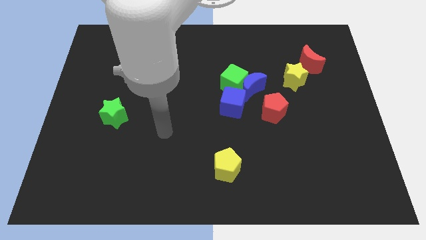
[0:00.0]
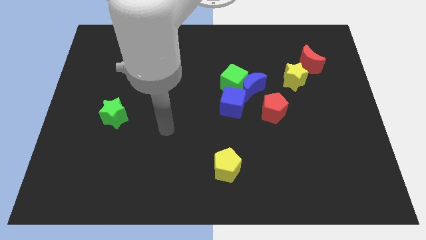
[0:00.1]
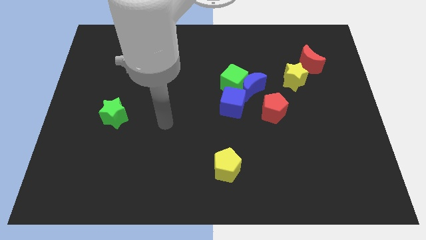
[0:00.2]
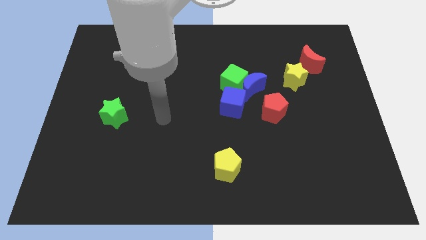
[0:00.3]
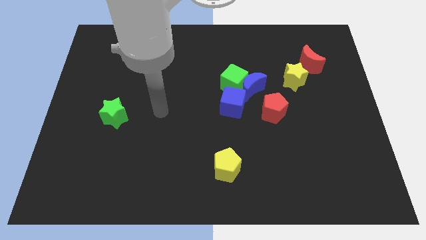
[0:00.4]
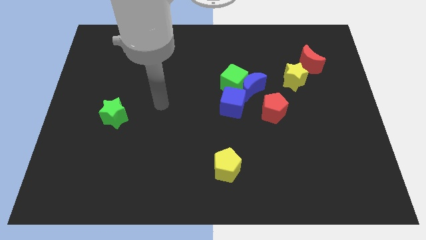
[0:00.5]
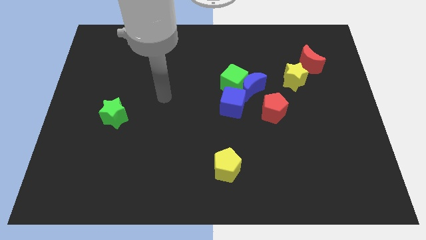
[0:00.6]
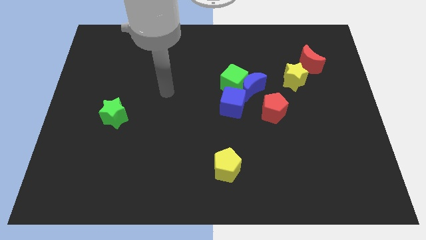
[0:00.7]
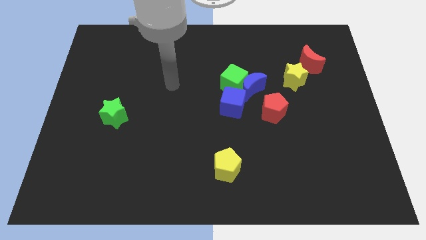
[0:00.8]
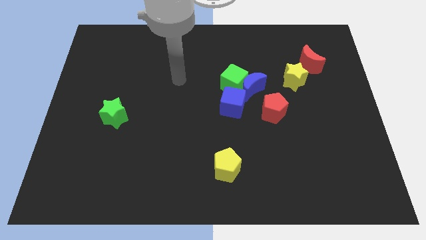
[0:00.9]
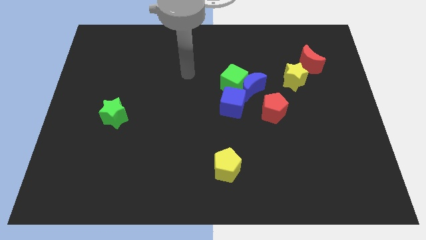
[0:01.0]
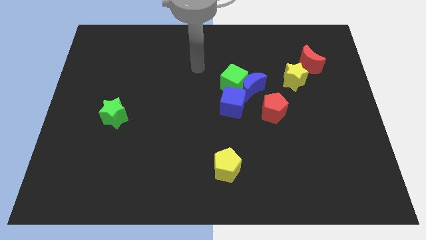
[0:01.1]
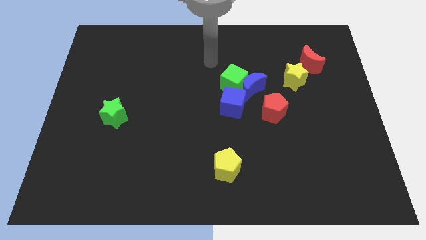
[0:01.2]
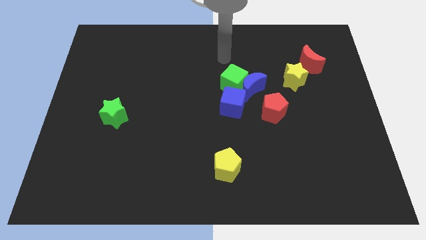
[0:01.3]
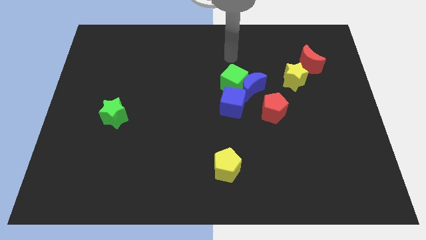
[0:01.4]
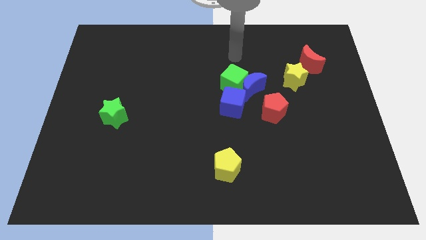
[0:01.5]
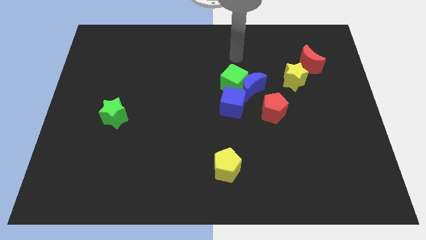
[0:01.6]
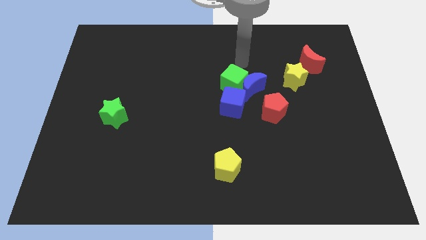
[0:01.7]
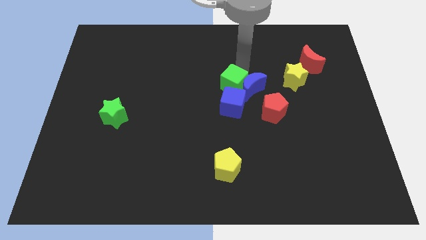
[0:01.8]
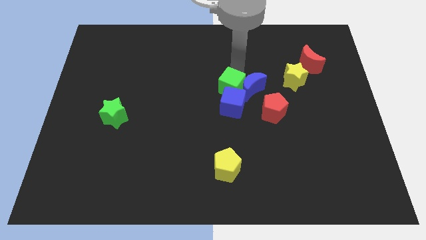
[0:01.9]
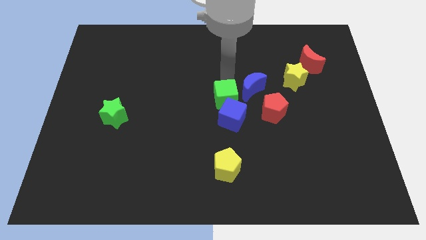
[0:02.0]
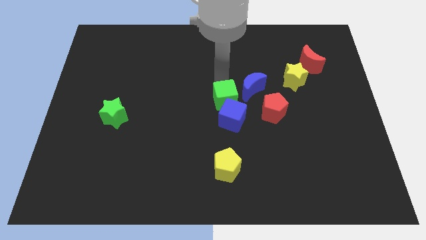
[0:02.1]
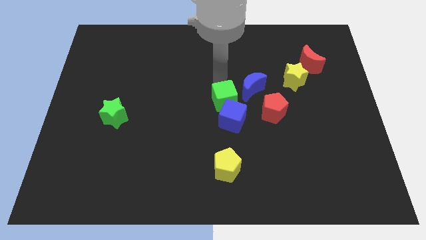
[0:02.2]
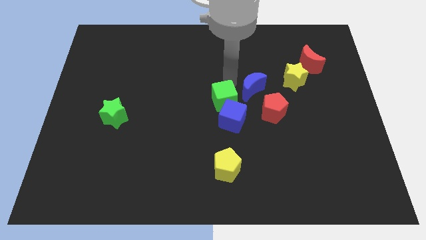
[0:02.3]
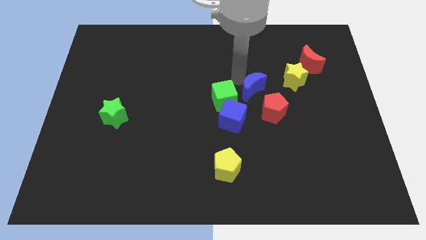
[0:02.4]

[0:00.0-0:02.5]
push the blue cube with the green cube slightly downwards

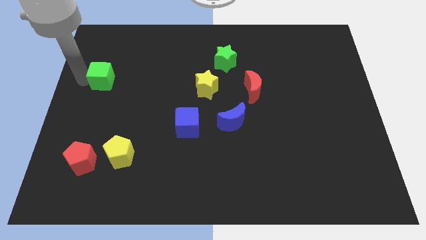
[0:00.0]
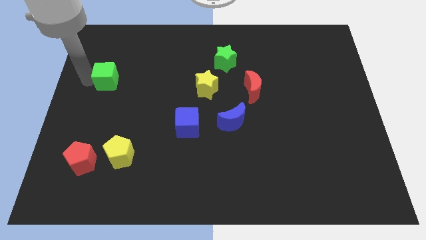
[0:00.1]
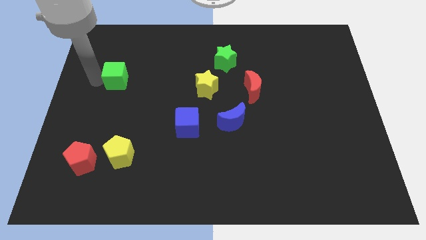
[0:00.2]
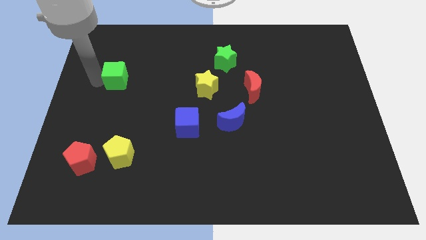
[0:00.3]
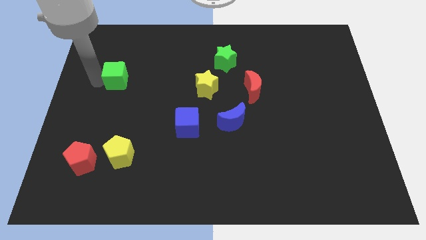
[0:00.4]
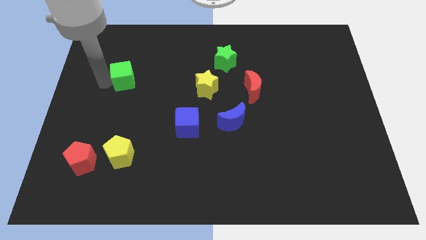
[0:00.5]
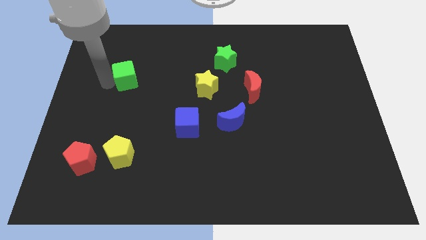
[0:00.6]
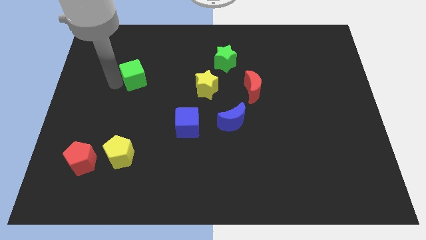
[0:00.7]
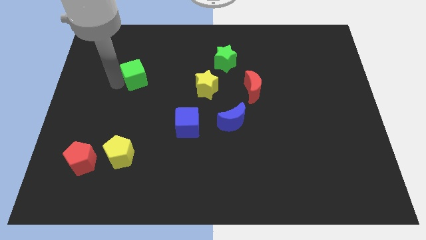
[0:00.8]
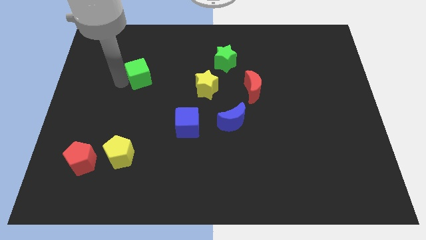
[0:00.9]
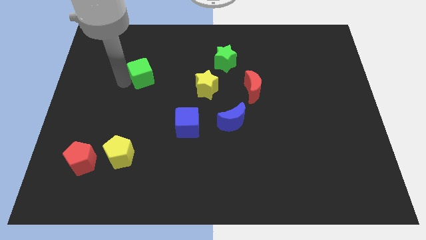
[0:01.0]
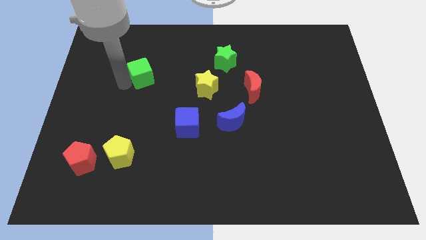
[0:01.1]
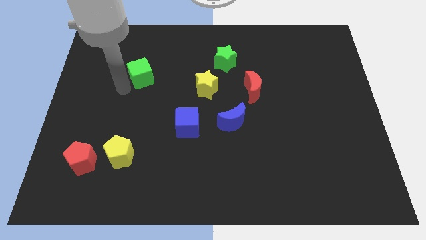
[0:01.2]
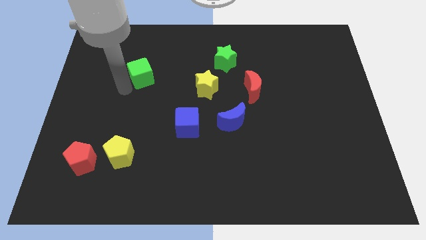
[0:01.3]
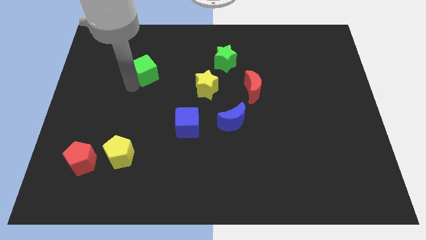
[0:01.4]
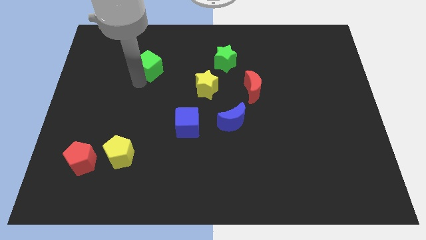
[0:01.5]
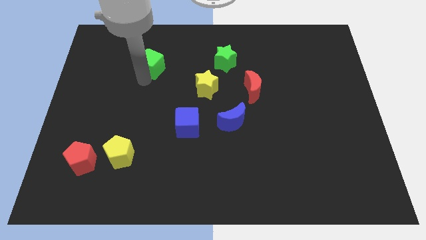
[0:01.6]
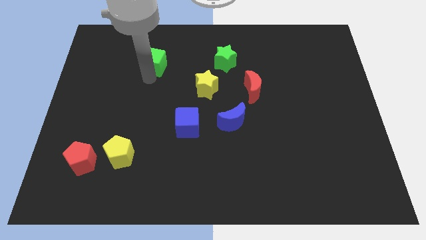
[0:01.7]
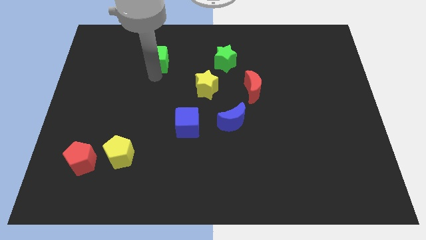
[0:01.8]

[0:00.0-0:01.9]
move the green cube parallel to the green star

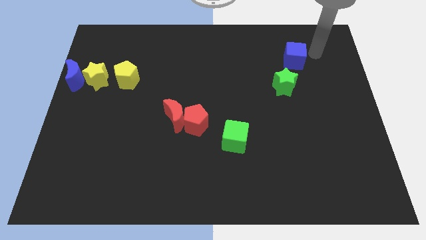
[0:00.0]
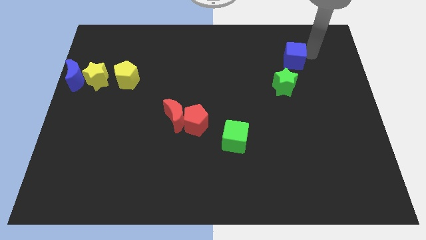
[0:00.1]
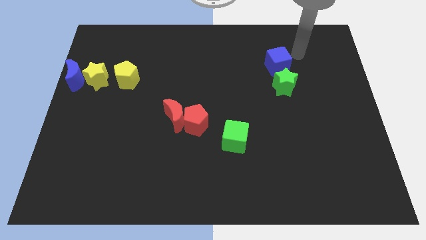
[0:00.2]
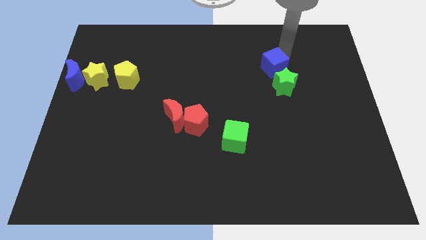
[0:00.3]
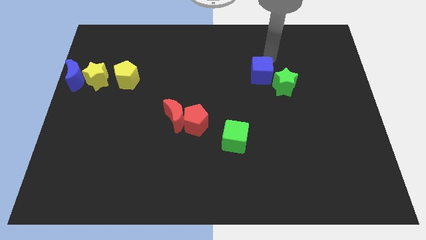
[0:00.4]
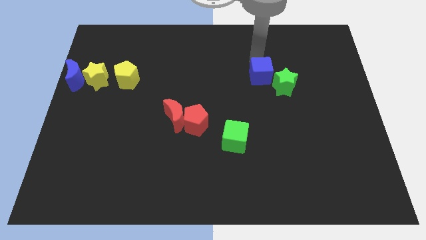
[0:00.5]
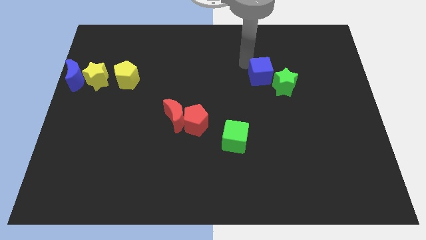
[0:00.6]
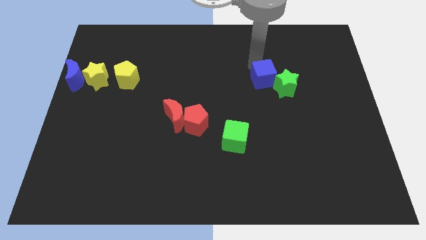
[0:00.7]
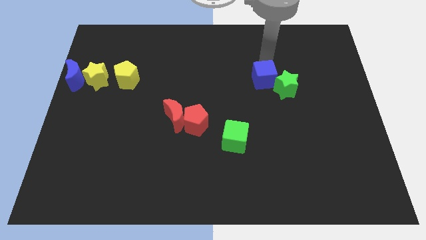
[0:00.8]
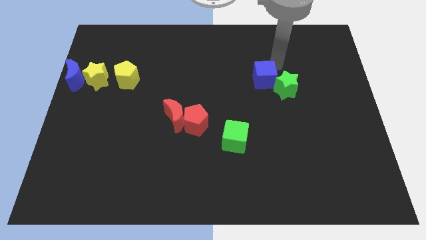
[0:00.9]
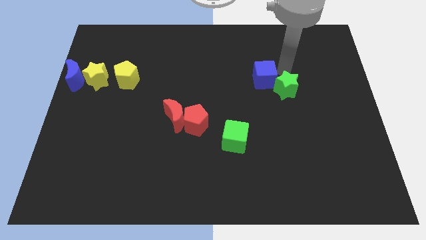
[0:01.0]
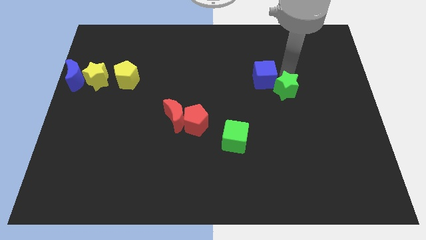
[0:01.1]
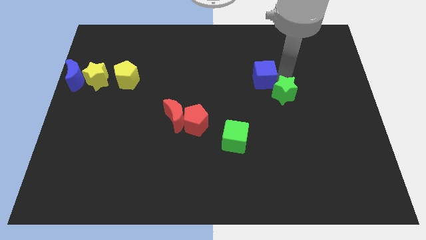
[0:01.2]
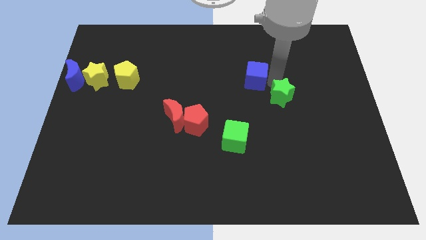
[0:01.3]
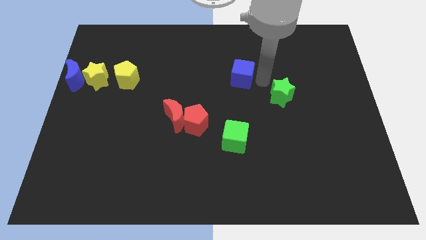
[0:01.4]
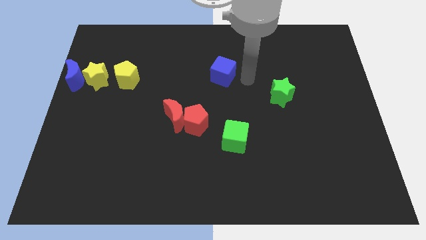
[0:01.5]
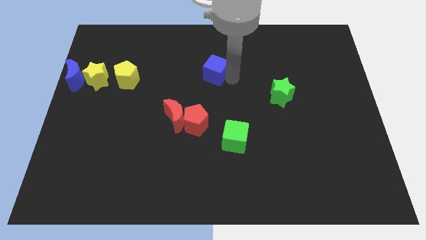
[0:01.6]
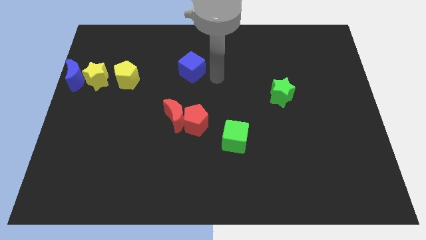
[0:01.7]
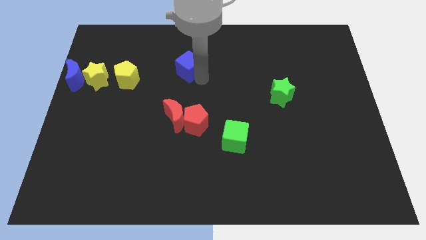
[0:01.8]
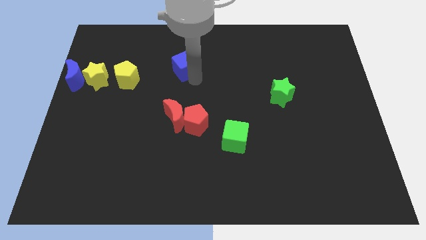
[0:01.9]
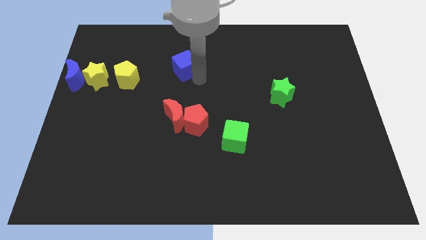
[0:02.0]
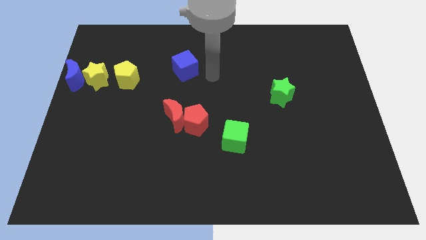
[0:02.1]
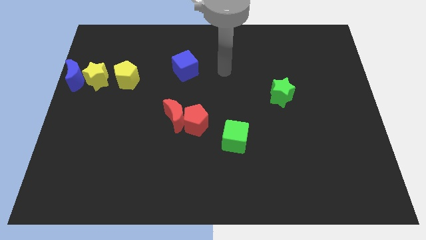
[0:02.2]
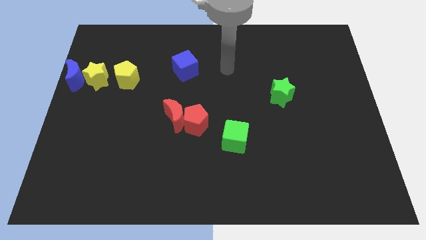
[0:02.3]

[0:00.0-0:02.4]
place the blue cube diagonal to the right of the yellow pentagon

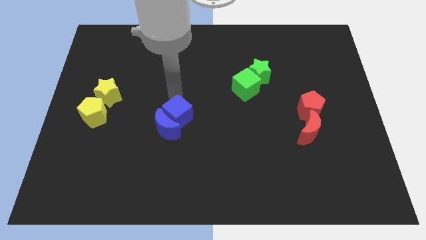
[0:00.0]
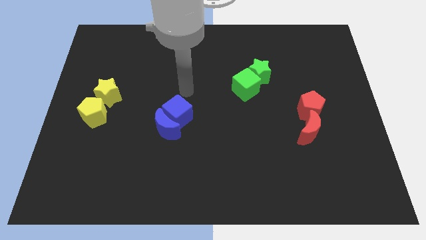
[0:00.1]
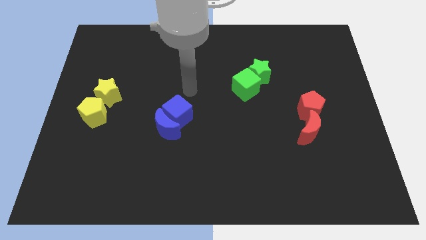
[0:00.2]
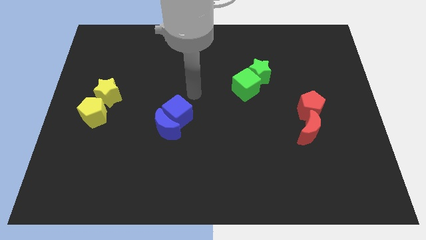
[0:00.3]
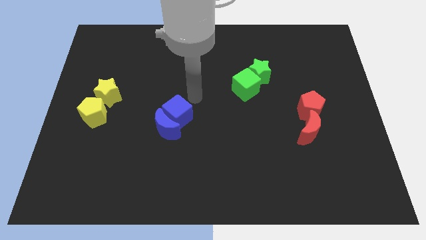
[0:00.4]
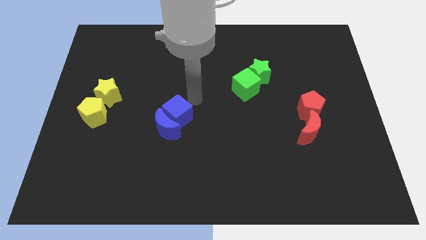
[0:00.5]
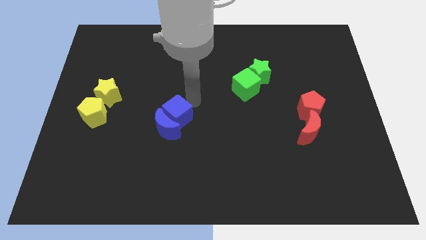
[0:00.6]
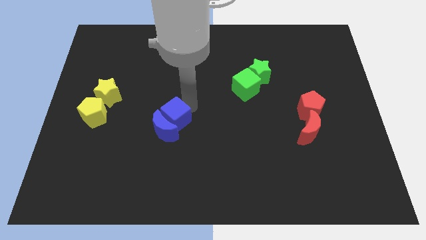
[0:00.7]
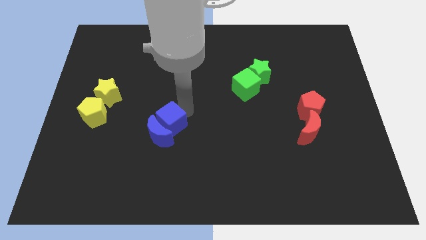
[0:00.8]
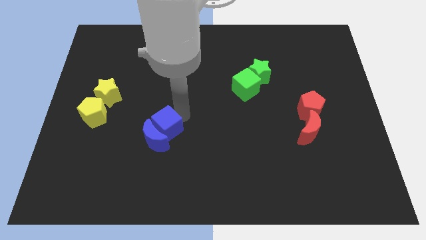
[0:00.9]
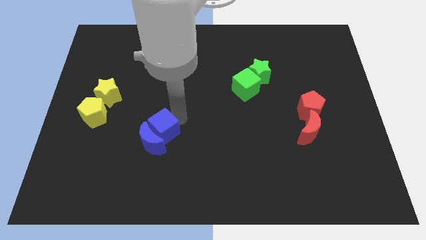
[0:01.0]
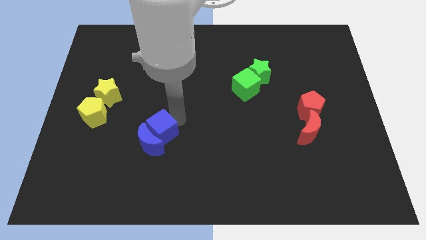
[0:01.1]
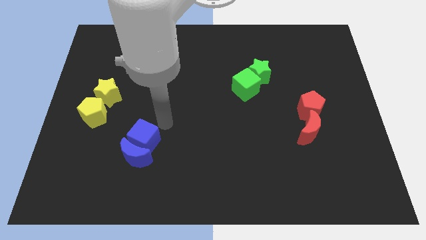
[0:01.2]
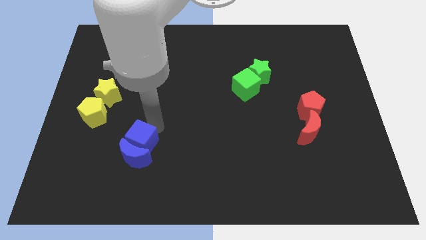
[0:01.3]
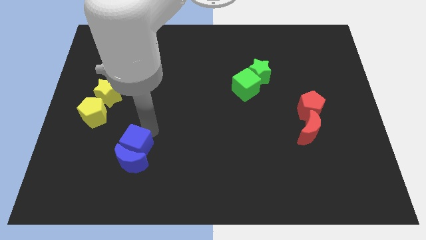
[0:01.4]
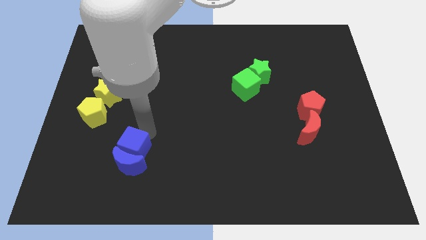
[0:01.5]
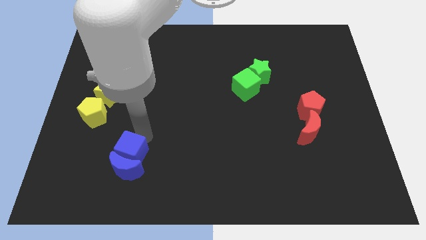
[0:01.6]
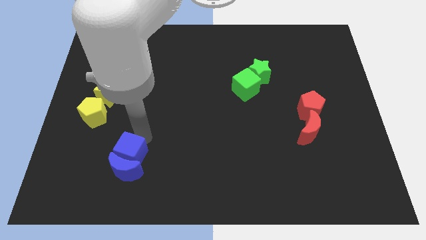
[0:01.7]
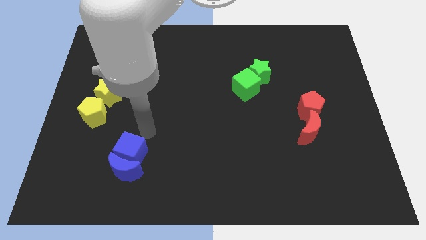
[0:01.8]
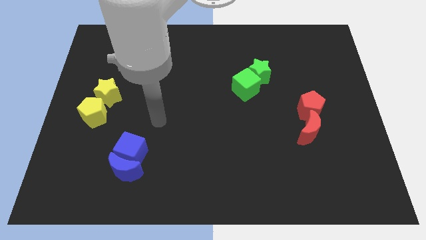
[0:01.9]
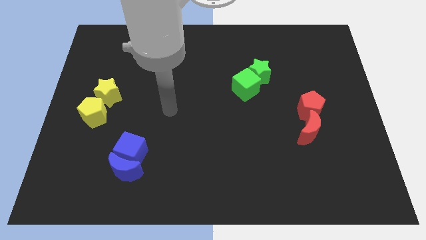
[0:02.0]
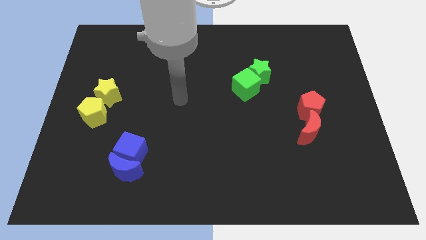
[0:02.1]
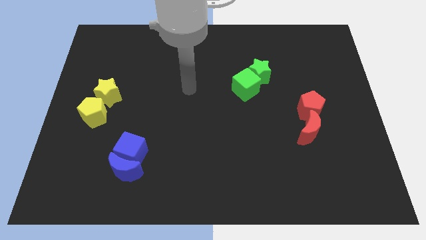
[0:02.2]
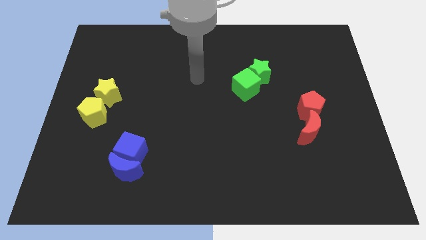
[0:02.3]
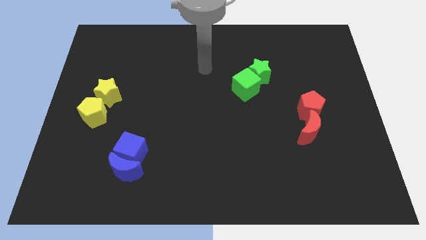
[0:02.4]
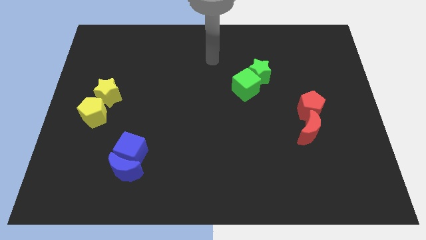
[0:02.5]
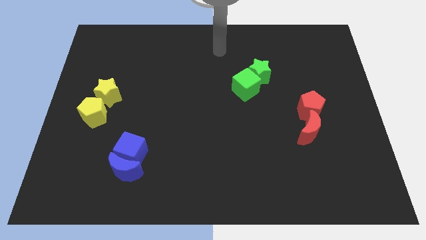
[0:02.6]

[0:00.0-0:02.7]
move the arm towards the top center of the board
